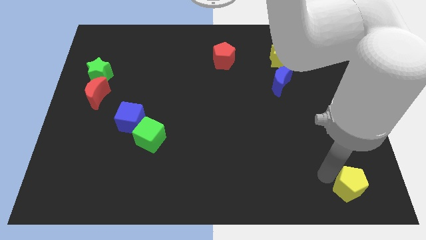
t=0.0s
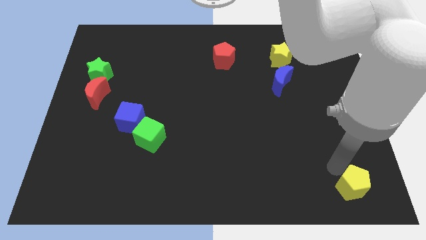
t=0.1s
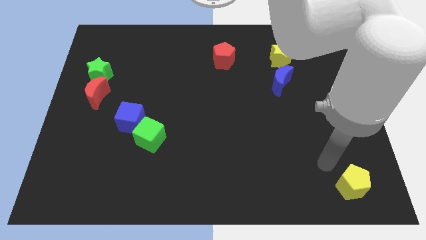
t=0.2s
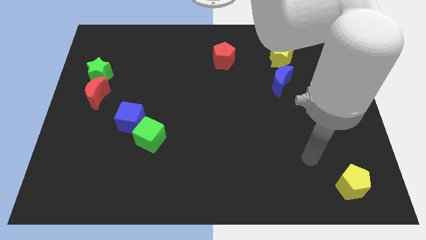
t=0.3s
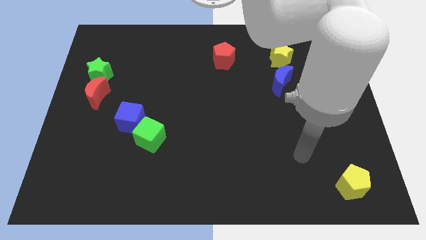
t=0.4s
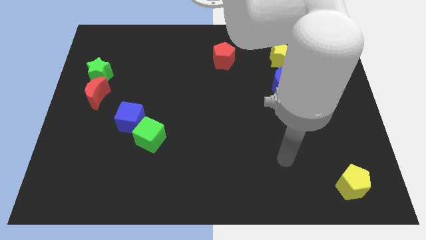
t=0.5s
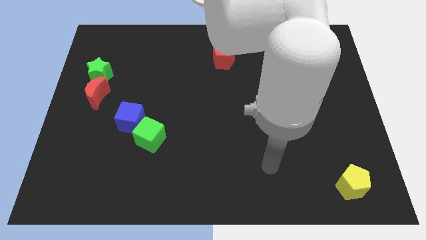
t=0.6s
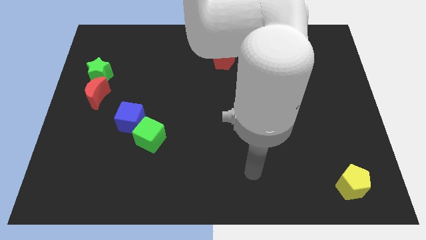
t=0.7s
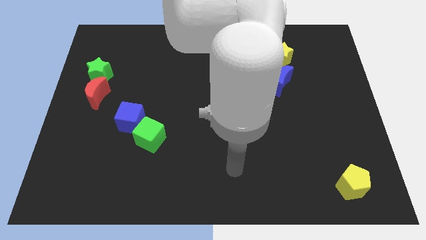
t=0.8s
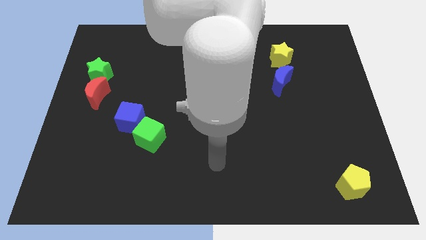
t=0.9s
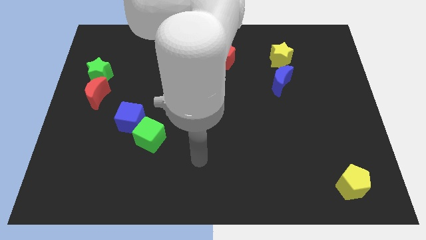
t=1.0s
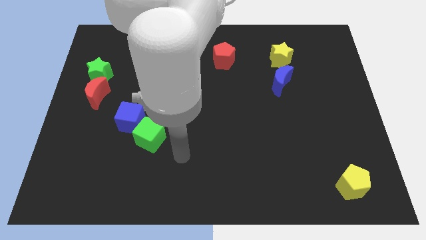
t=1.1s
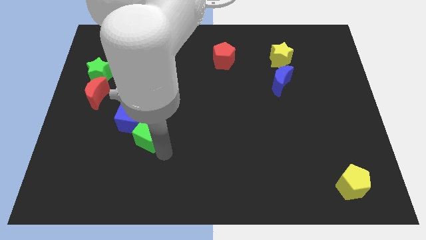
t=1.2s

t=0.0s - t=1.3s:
move your hand towards the right of the green cube

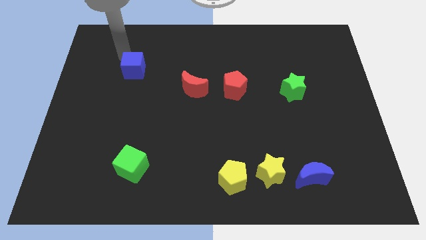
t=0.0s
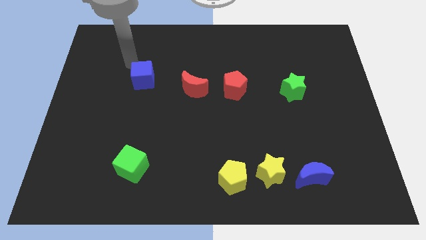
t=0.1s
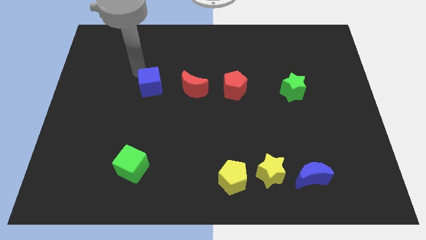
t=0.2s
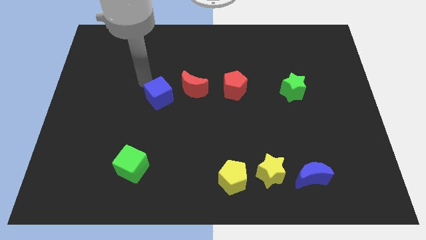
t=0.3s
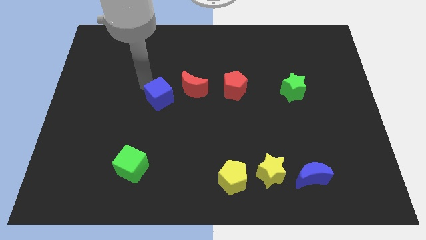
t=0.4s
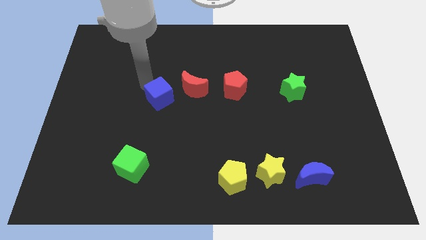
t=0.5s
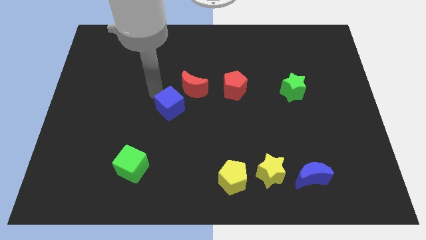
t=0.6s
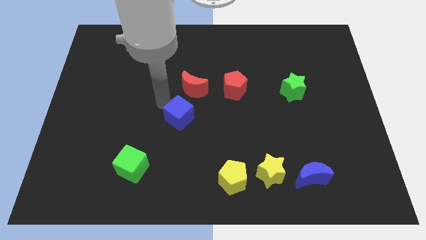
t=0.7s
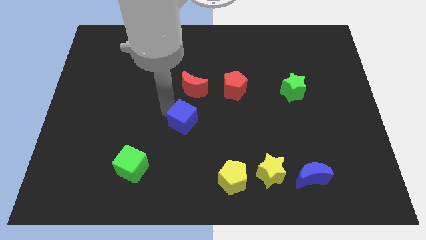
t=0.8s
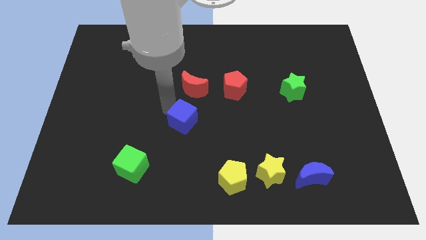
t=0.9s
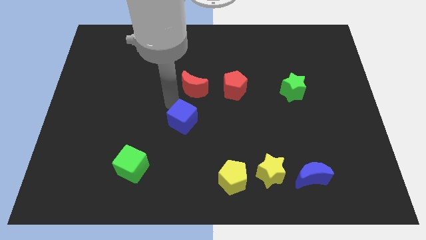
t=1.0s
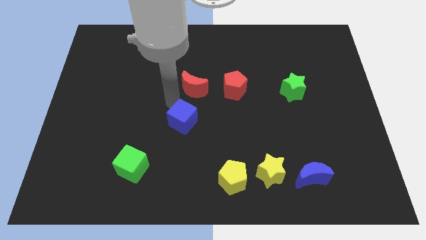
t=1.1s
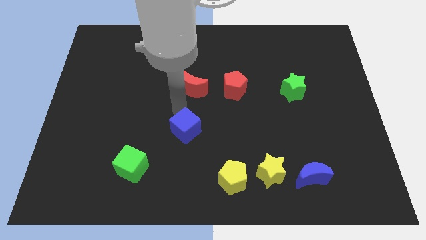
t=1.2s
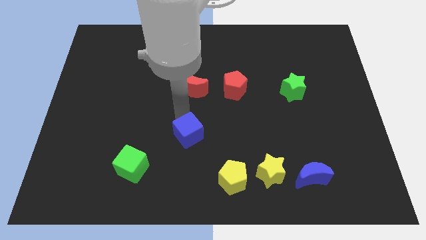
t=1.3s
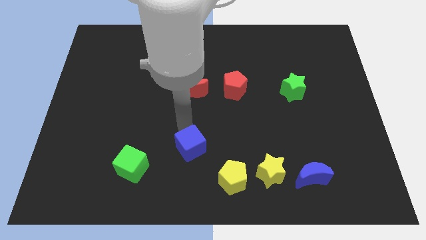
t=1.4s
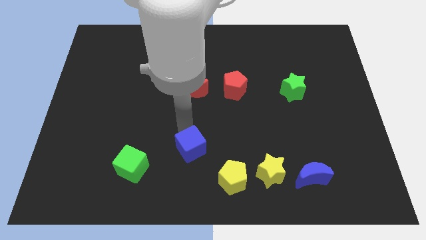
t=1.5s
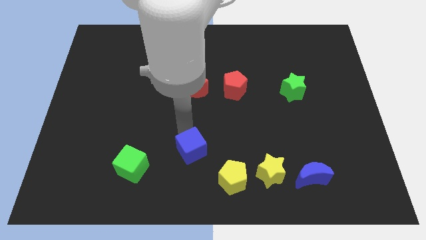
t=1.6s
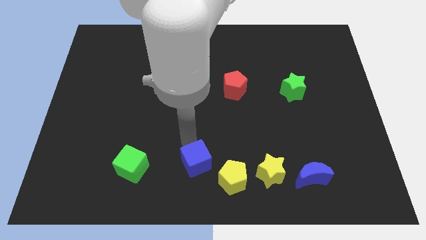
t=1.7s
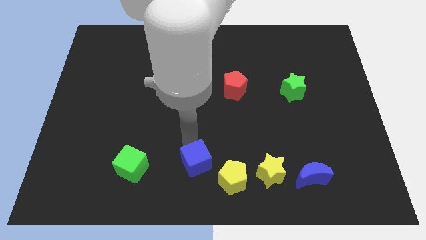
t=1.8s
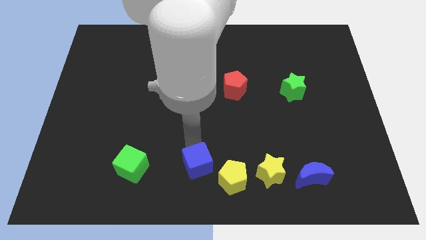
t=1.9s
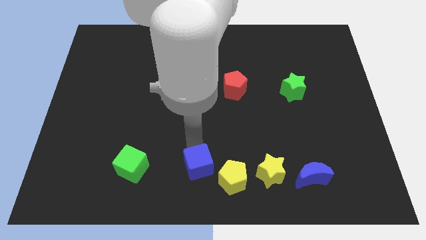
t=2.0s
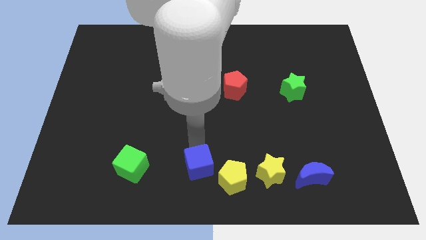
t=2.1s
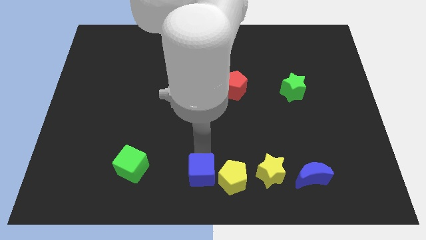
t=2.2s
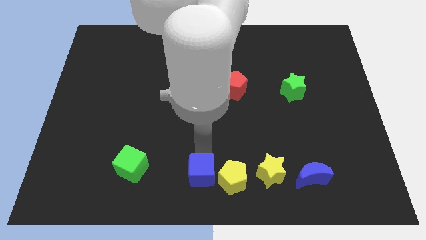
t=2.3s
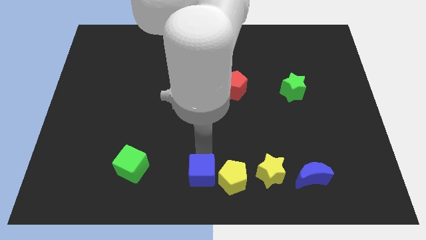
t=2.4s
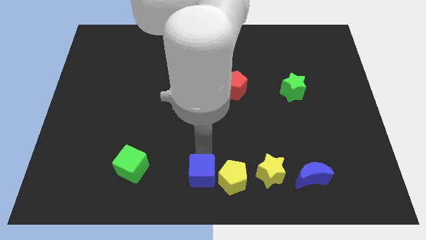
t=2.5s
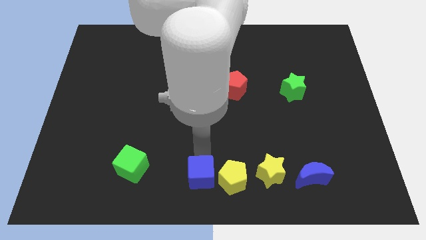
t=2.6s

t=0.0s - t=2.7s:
push the blue cube left to the yellow pentagon

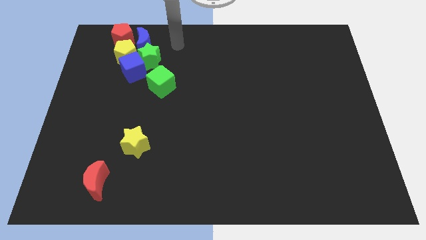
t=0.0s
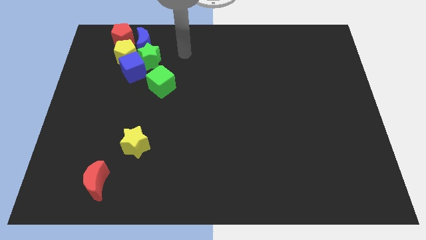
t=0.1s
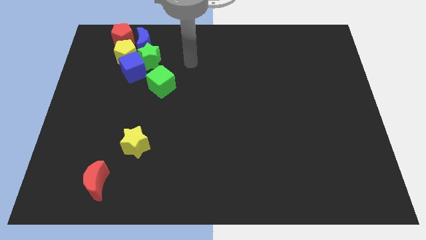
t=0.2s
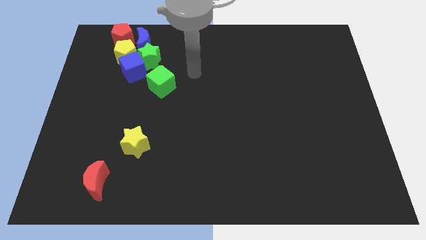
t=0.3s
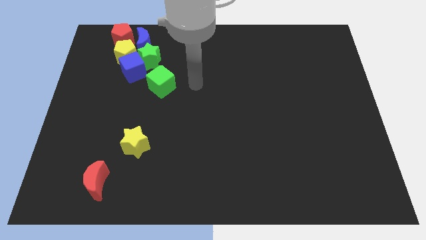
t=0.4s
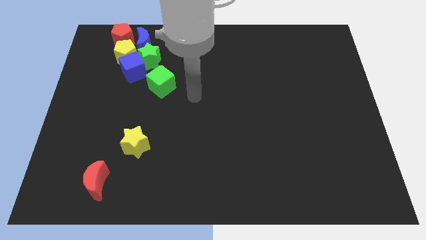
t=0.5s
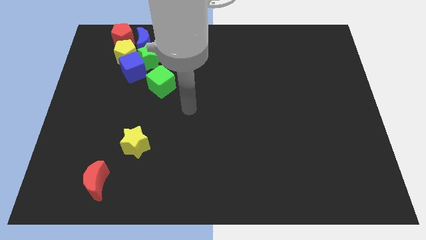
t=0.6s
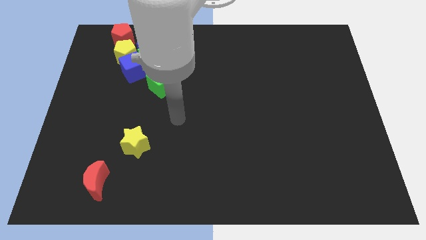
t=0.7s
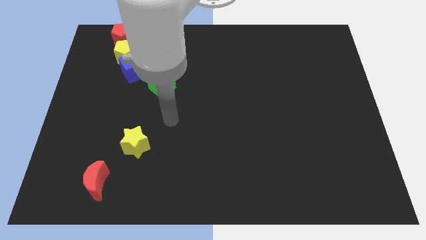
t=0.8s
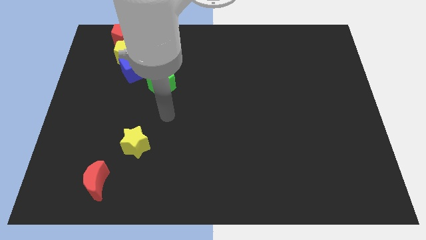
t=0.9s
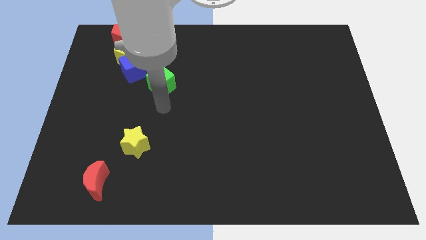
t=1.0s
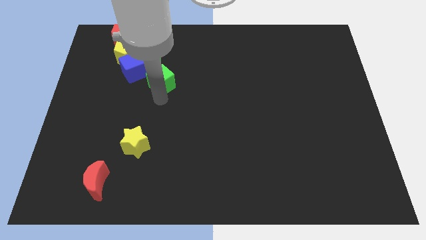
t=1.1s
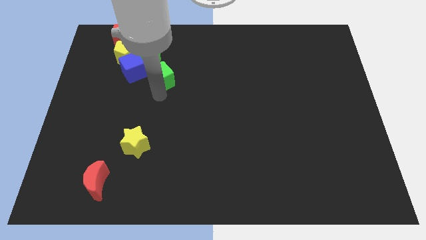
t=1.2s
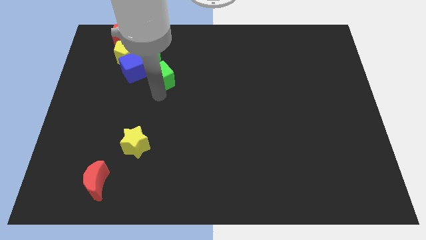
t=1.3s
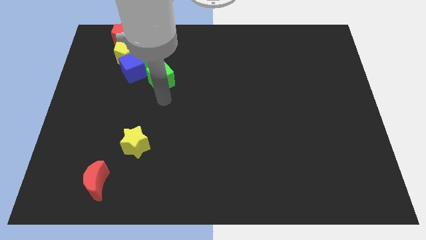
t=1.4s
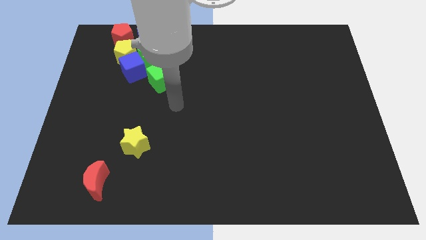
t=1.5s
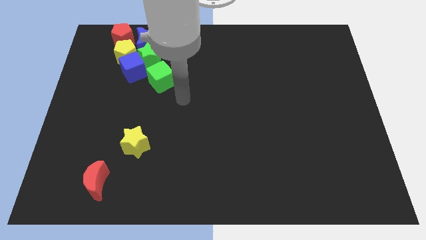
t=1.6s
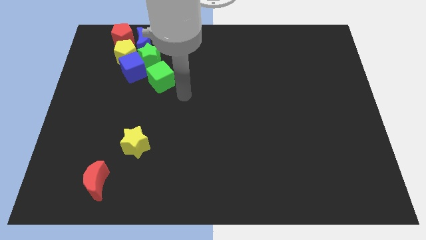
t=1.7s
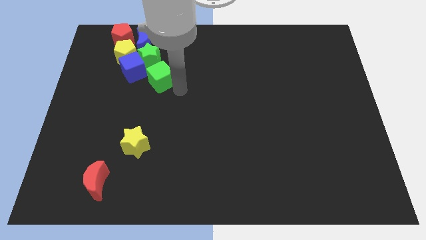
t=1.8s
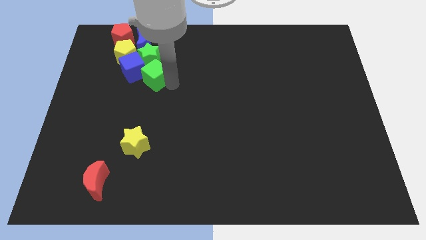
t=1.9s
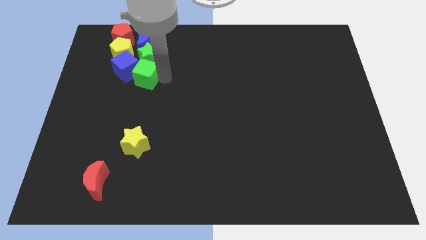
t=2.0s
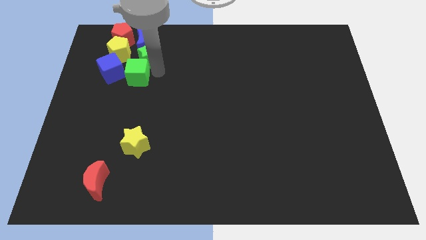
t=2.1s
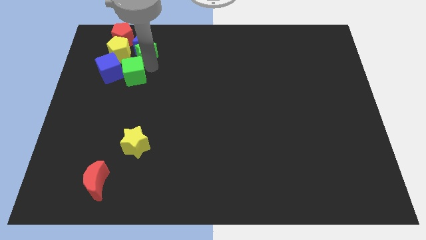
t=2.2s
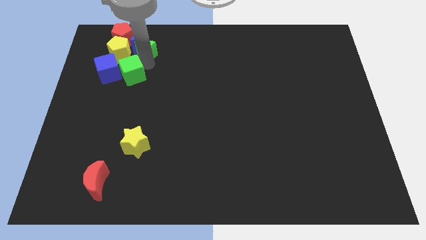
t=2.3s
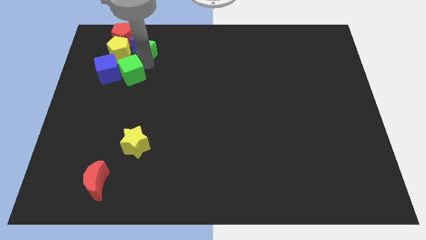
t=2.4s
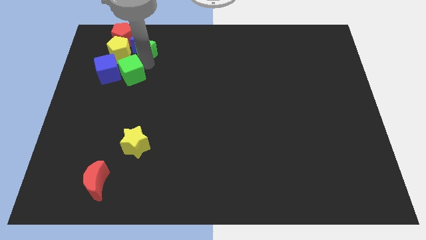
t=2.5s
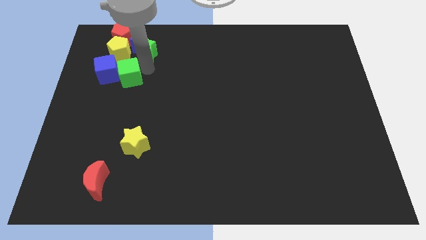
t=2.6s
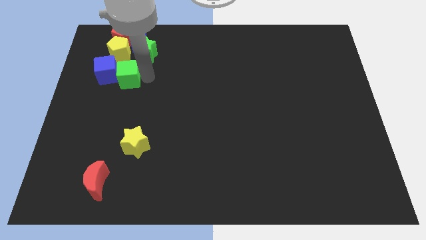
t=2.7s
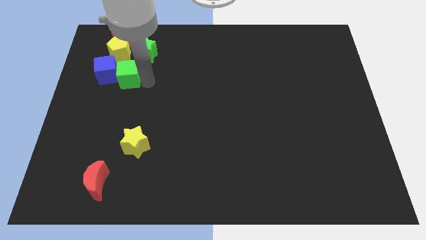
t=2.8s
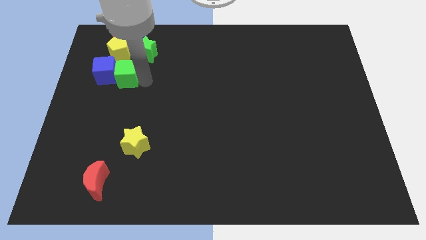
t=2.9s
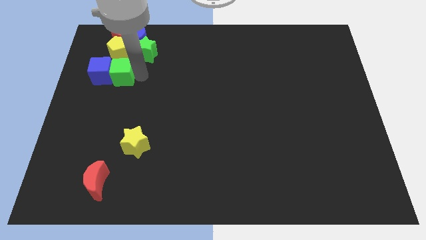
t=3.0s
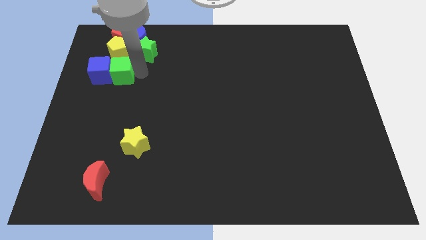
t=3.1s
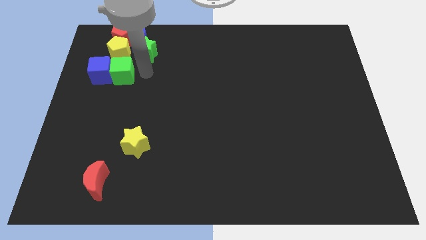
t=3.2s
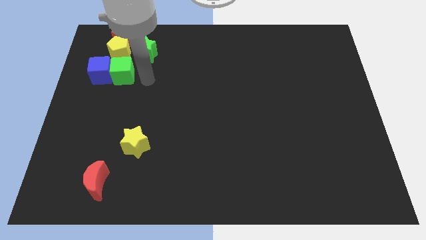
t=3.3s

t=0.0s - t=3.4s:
point arm between green star and green cube

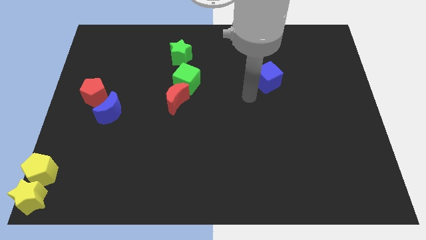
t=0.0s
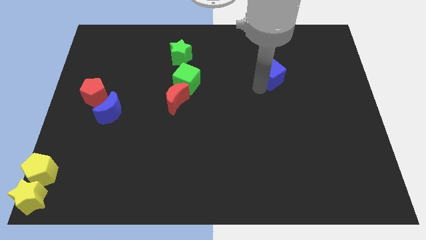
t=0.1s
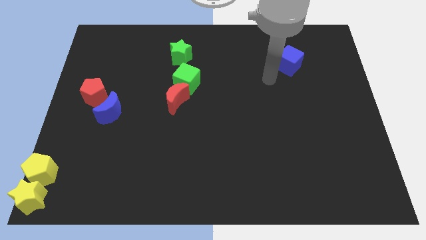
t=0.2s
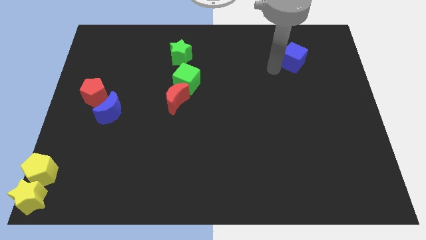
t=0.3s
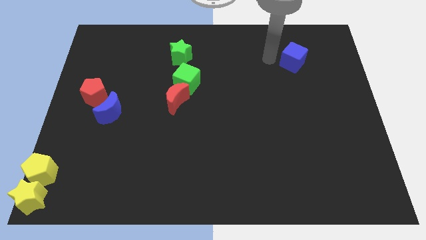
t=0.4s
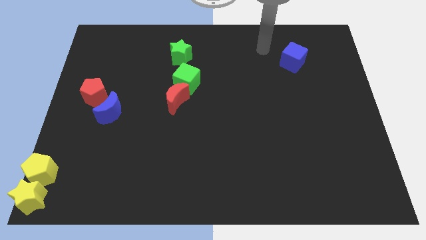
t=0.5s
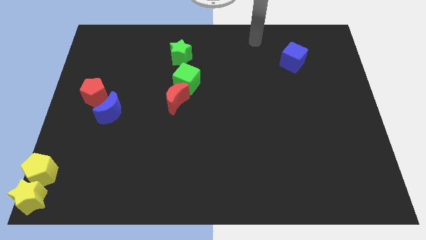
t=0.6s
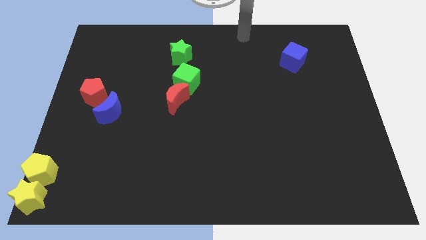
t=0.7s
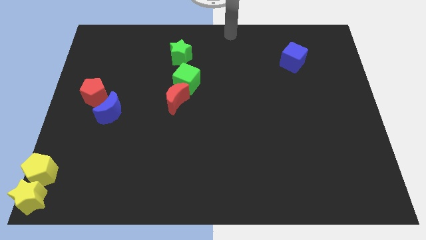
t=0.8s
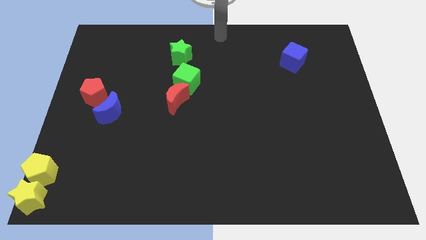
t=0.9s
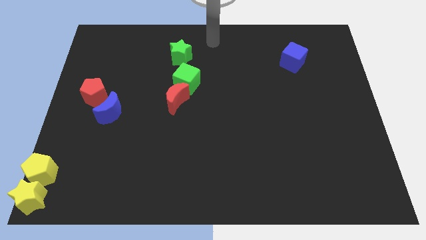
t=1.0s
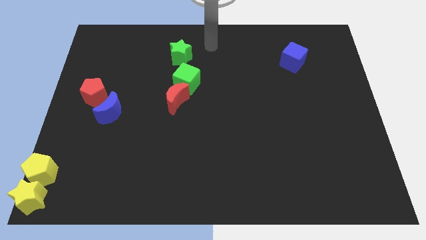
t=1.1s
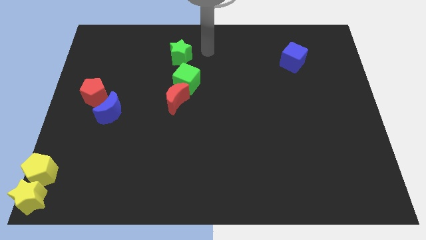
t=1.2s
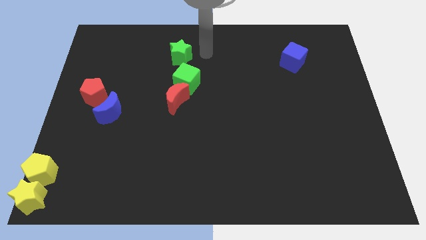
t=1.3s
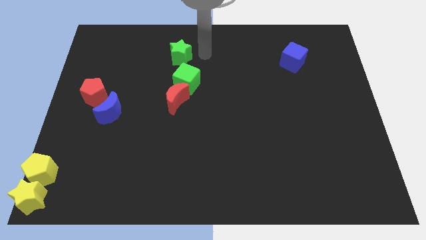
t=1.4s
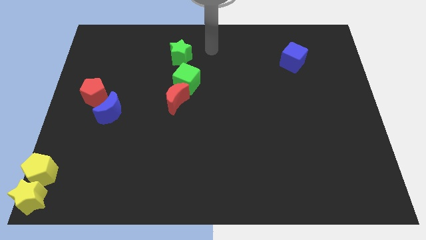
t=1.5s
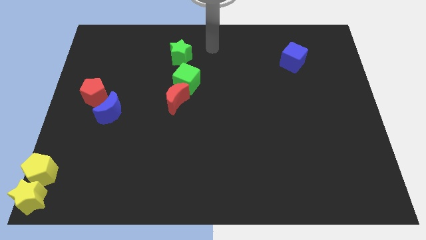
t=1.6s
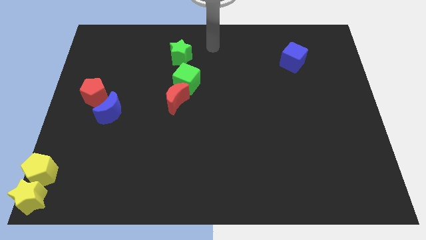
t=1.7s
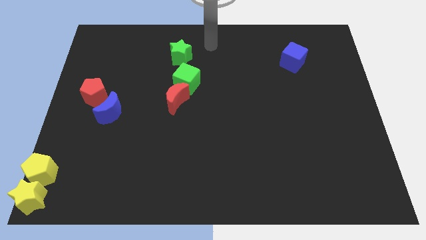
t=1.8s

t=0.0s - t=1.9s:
push the blue cube to the top right of the board
